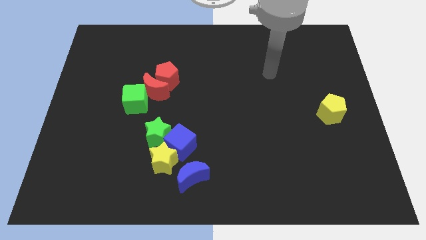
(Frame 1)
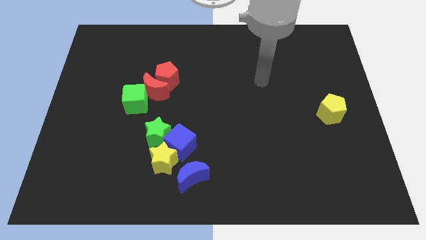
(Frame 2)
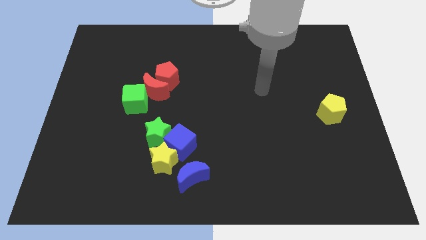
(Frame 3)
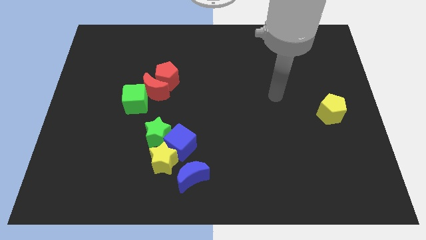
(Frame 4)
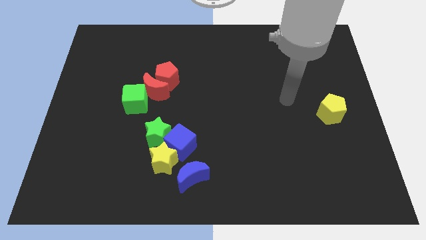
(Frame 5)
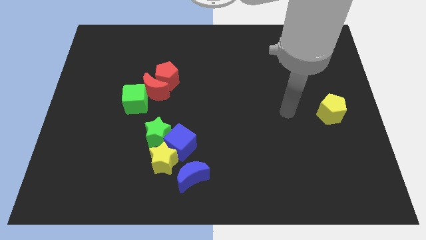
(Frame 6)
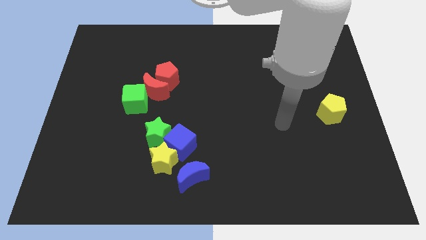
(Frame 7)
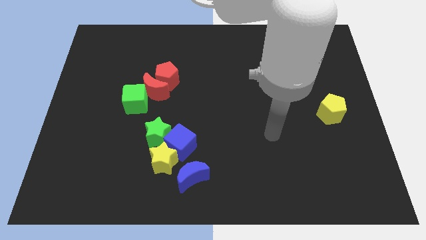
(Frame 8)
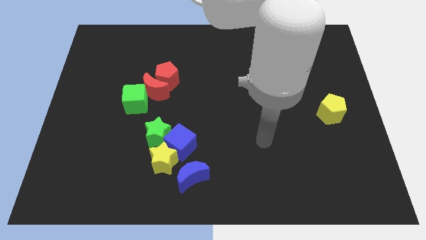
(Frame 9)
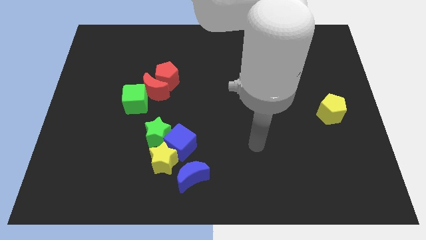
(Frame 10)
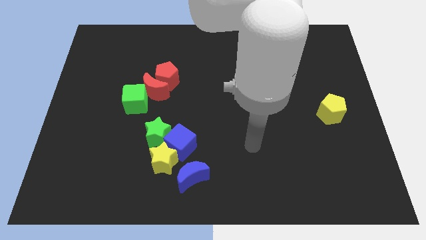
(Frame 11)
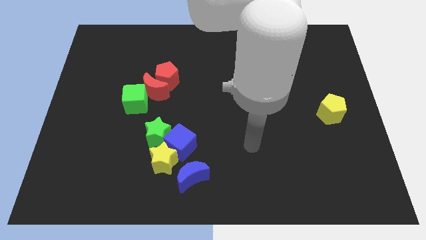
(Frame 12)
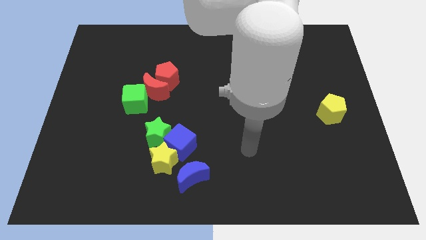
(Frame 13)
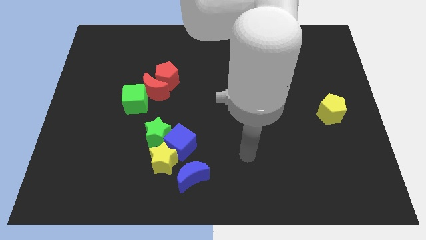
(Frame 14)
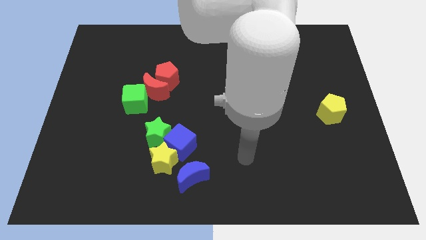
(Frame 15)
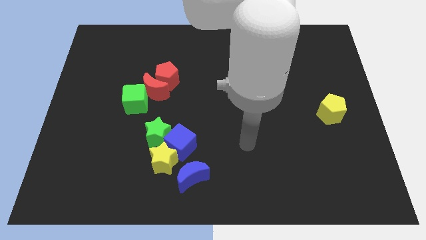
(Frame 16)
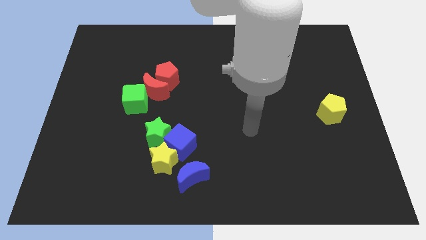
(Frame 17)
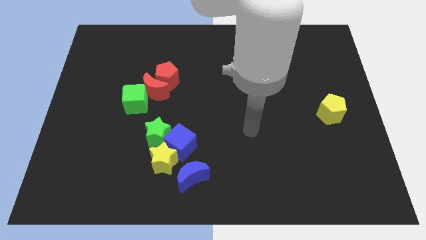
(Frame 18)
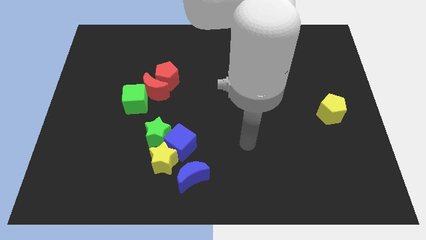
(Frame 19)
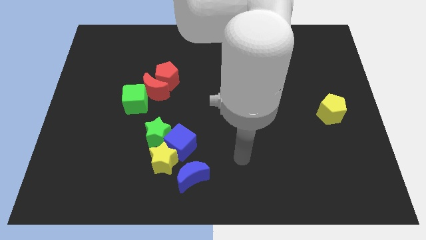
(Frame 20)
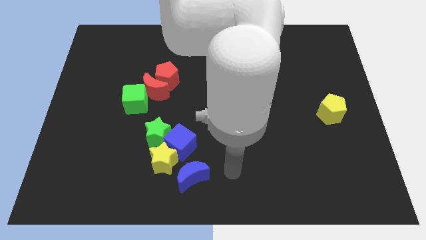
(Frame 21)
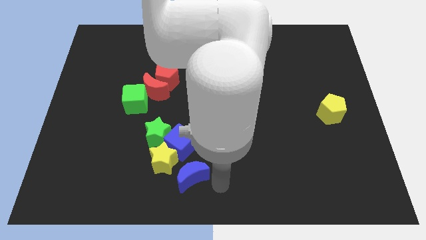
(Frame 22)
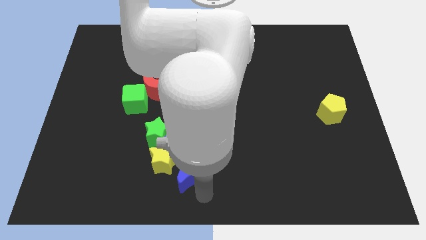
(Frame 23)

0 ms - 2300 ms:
point your am below blue moon

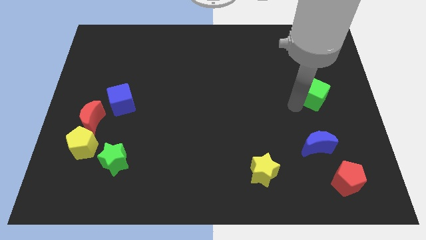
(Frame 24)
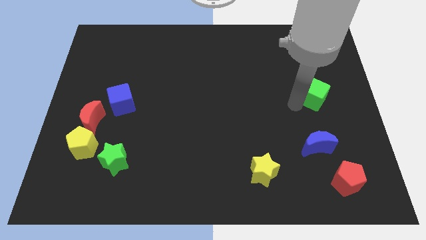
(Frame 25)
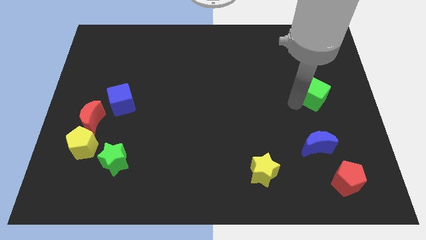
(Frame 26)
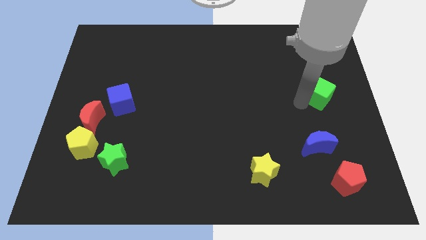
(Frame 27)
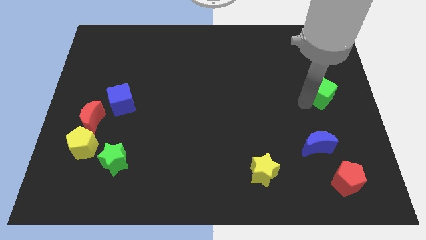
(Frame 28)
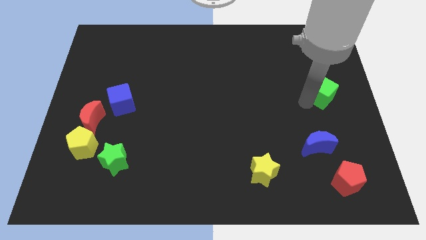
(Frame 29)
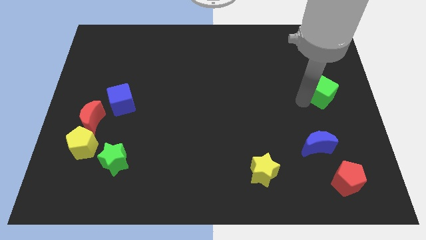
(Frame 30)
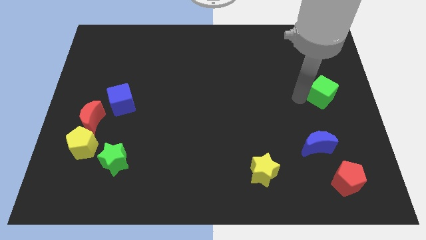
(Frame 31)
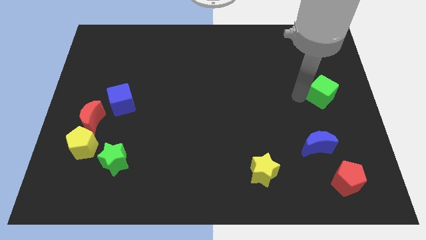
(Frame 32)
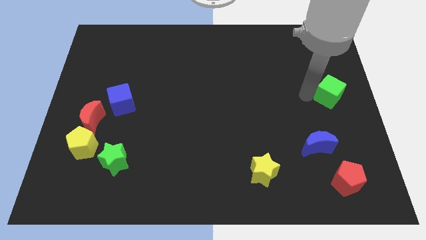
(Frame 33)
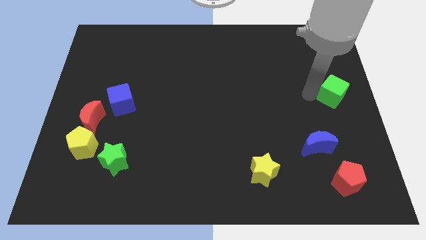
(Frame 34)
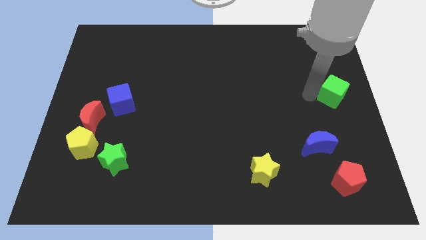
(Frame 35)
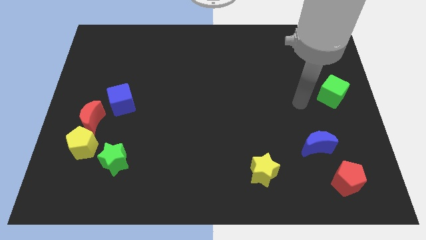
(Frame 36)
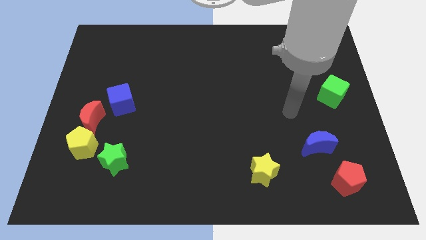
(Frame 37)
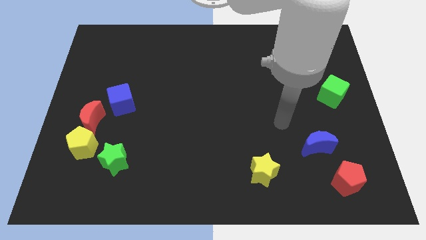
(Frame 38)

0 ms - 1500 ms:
move the green cube towards right of board

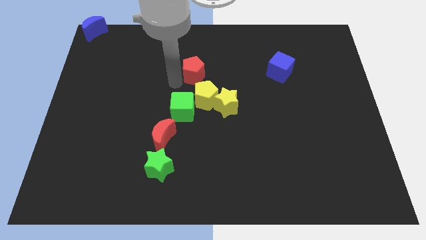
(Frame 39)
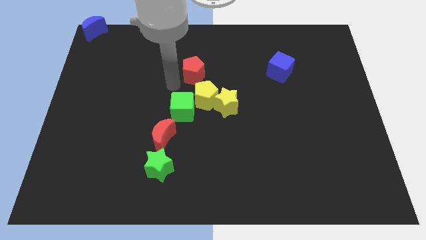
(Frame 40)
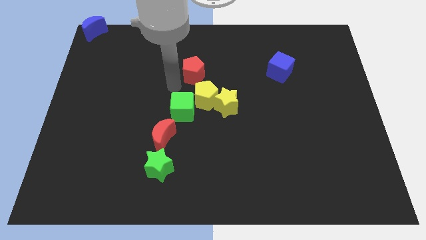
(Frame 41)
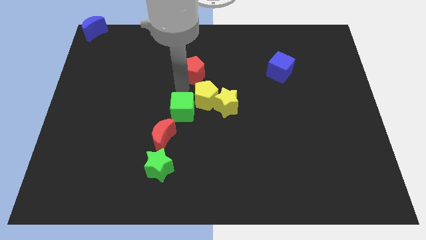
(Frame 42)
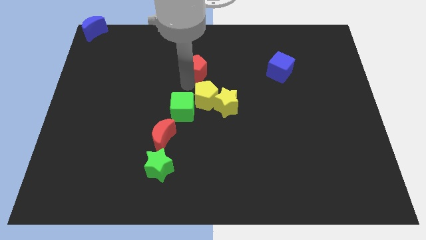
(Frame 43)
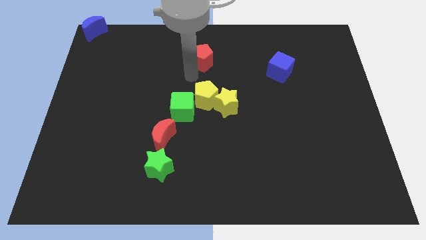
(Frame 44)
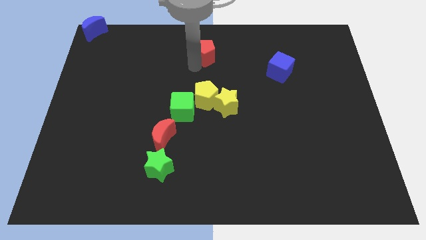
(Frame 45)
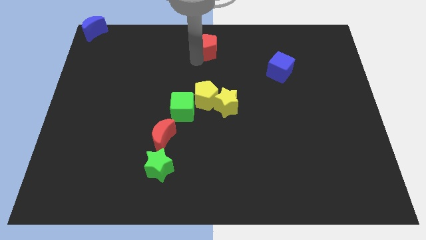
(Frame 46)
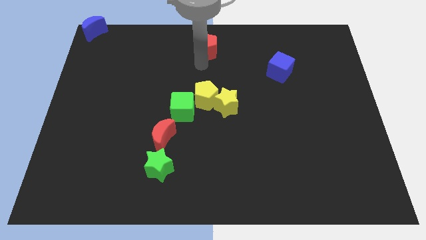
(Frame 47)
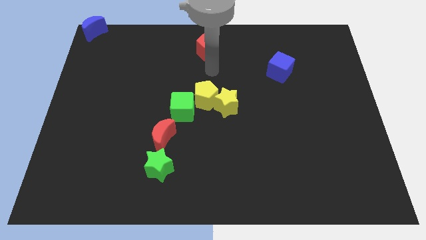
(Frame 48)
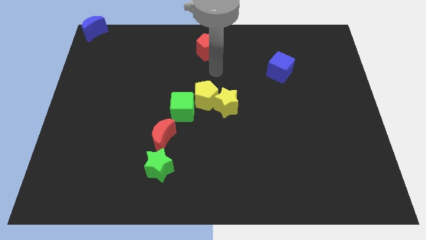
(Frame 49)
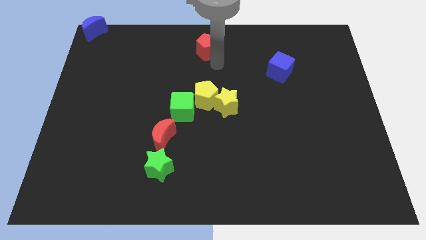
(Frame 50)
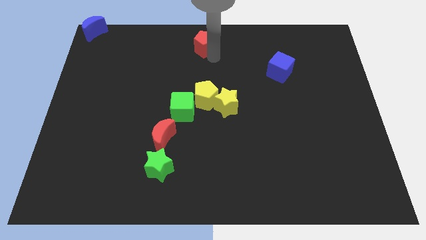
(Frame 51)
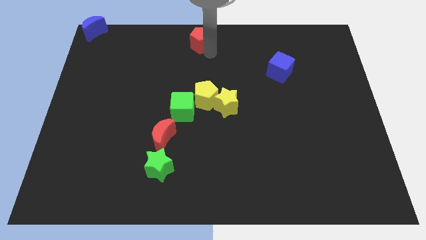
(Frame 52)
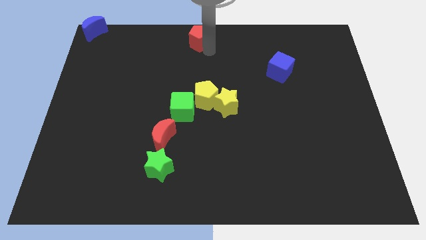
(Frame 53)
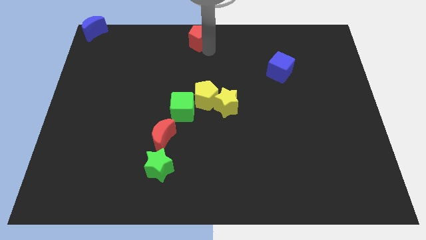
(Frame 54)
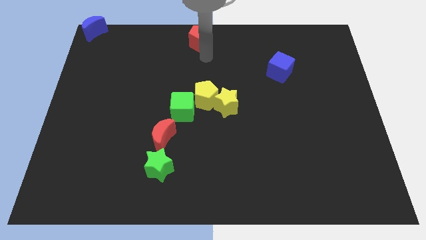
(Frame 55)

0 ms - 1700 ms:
move the red pentagon to the top center of the board

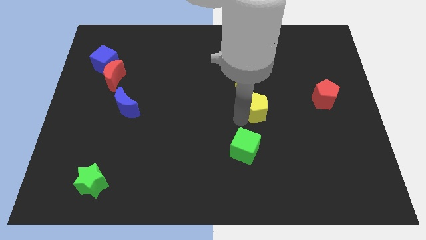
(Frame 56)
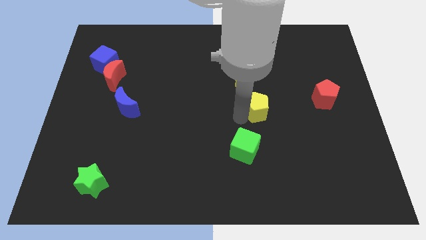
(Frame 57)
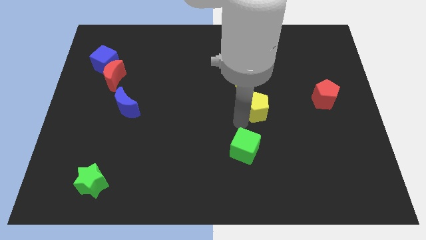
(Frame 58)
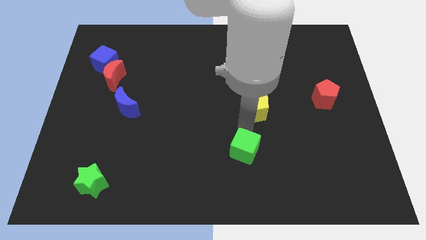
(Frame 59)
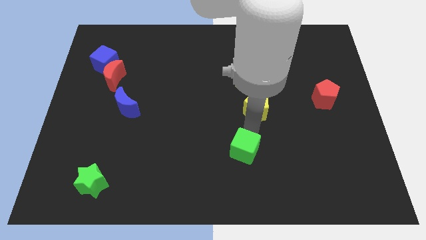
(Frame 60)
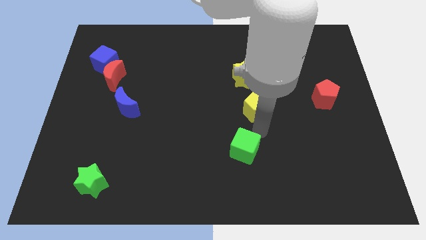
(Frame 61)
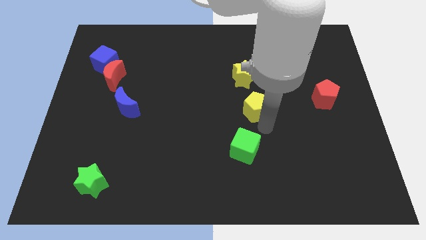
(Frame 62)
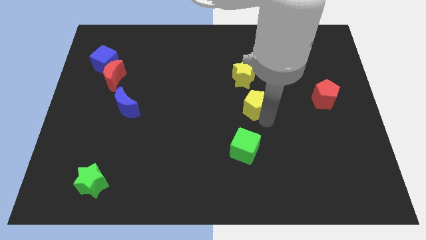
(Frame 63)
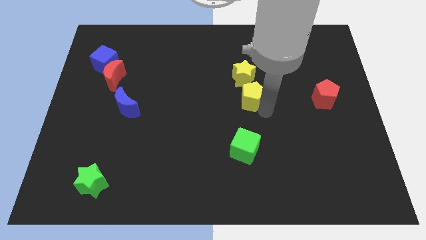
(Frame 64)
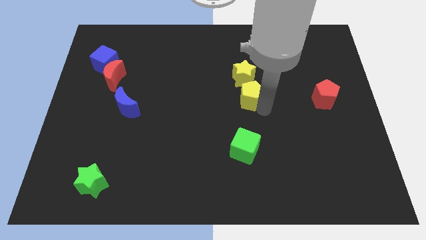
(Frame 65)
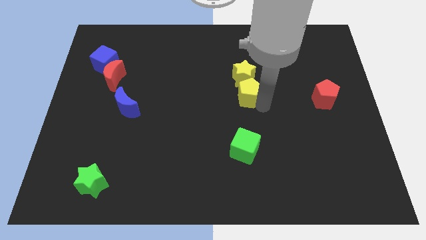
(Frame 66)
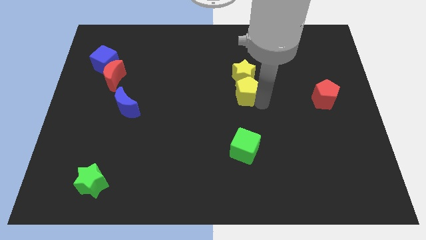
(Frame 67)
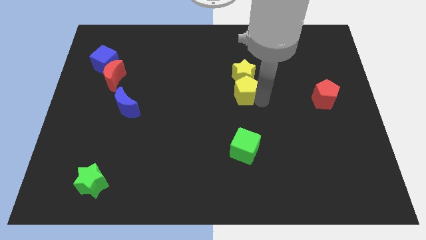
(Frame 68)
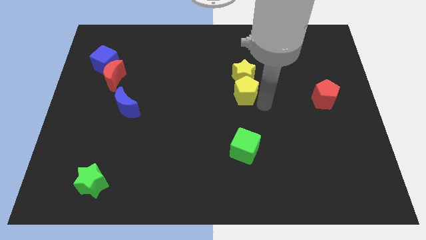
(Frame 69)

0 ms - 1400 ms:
push the yellow pentagon into the yellow star

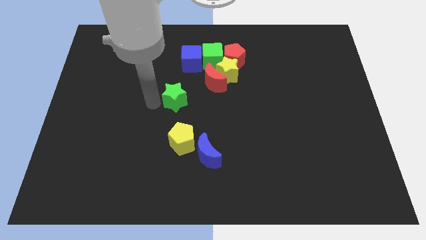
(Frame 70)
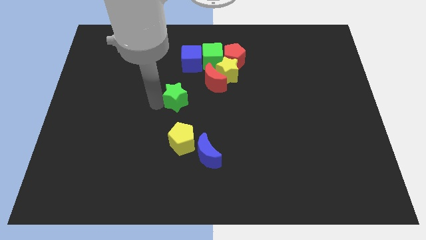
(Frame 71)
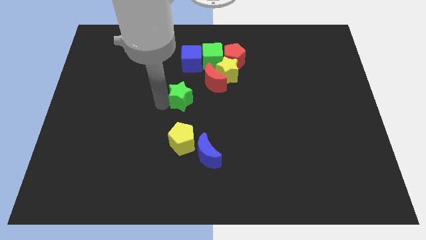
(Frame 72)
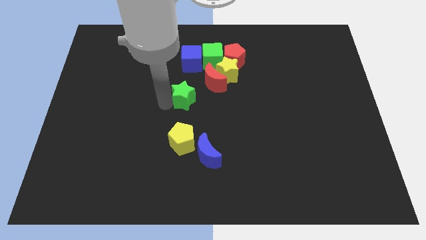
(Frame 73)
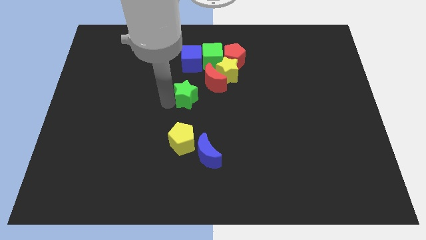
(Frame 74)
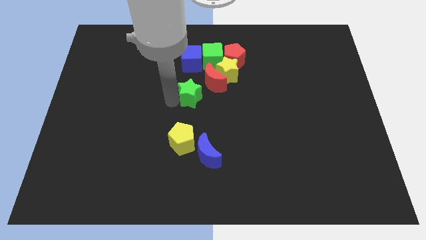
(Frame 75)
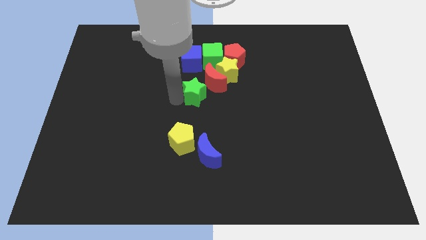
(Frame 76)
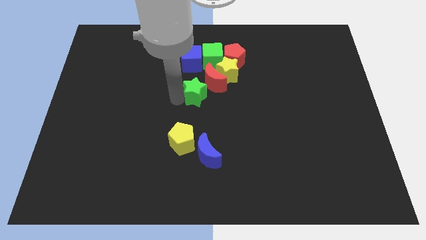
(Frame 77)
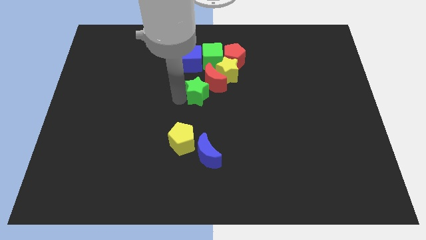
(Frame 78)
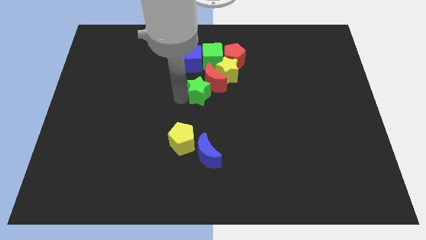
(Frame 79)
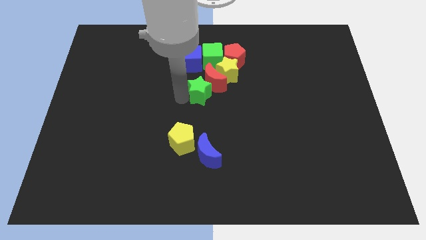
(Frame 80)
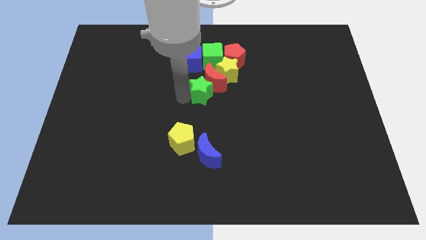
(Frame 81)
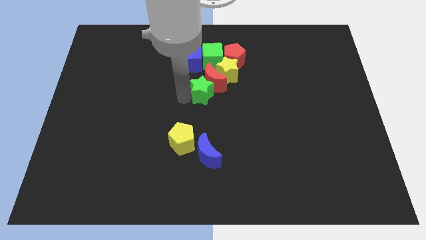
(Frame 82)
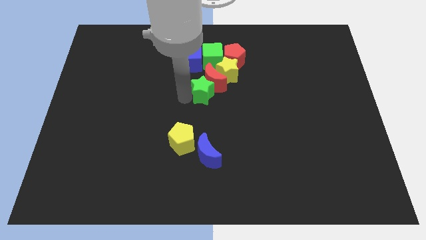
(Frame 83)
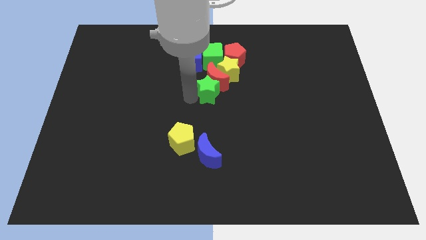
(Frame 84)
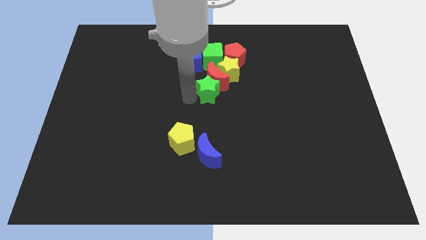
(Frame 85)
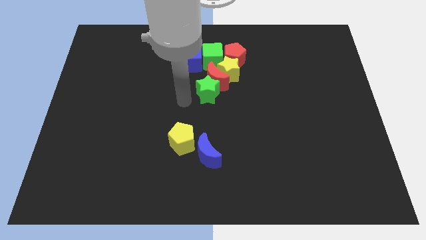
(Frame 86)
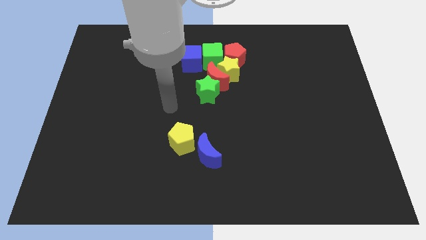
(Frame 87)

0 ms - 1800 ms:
move the green star to the left side of the red moon

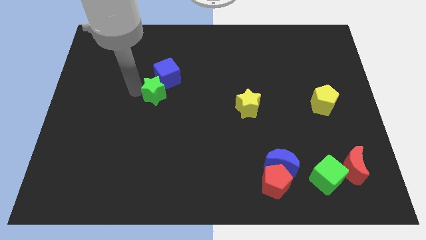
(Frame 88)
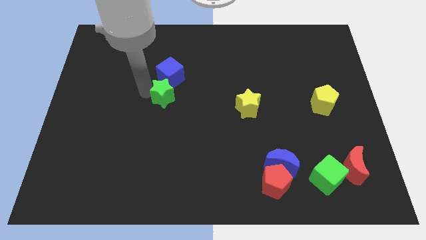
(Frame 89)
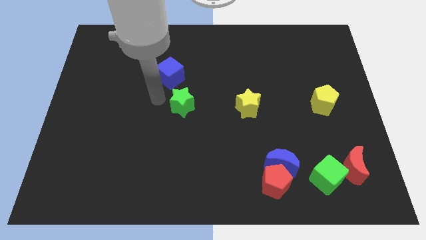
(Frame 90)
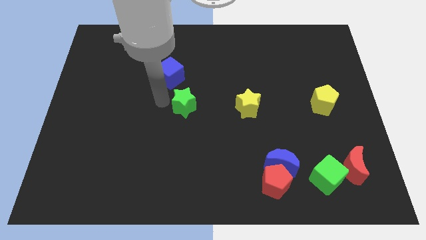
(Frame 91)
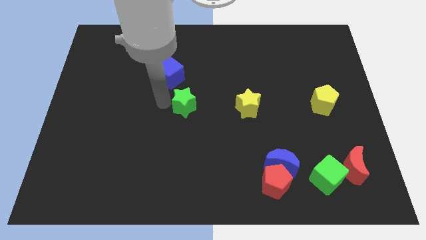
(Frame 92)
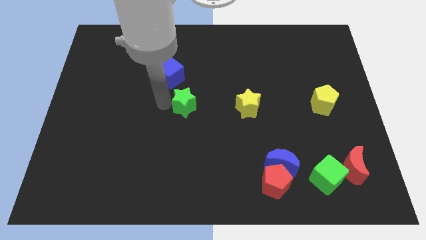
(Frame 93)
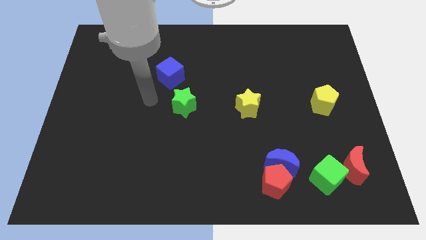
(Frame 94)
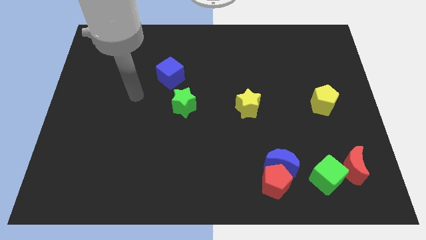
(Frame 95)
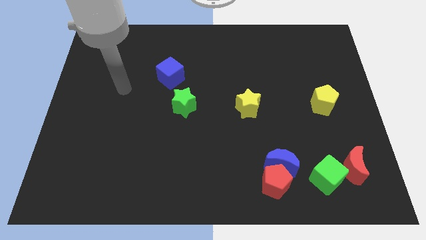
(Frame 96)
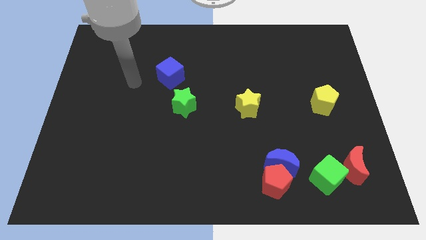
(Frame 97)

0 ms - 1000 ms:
place the green star left to the yellow star
